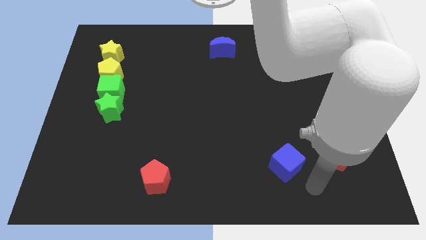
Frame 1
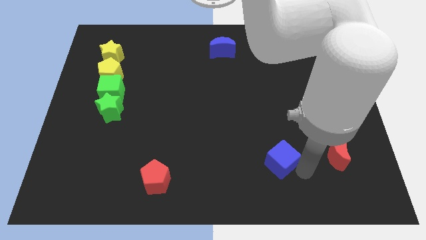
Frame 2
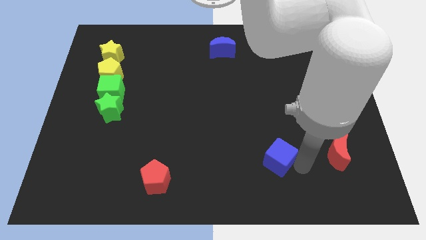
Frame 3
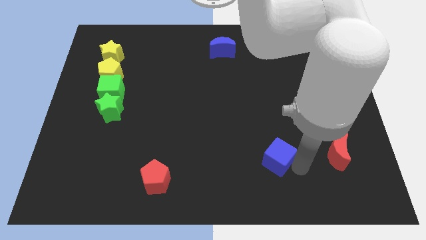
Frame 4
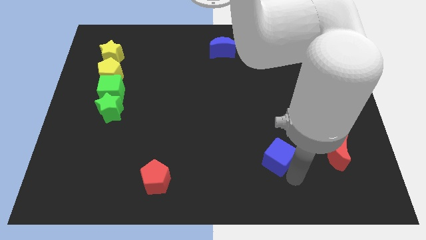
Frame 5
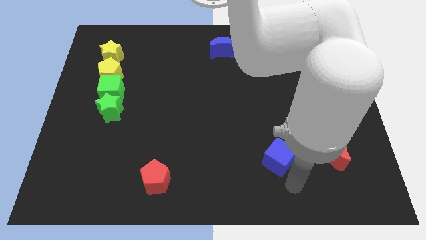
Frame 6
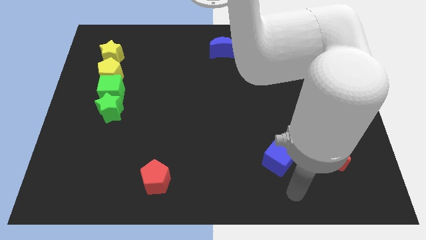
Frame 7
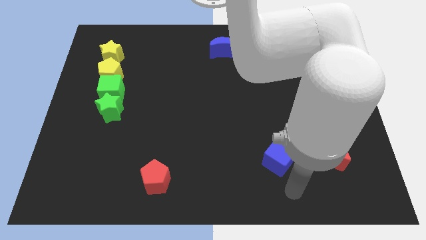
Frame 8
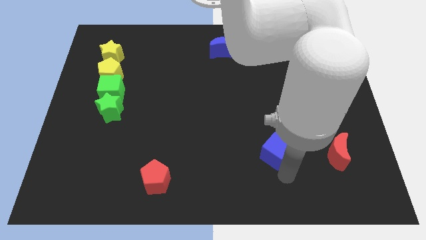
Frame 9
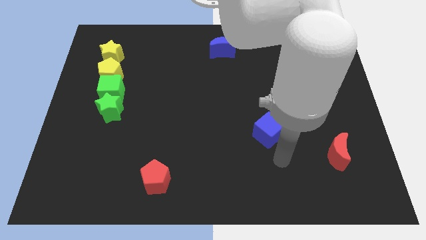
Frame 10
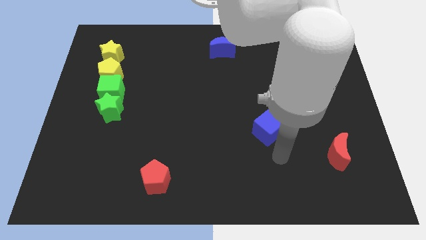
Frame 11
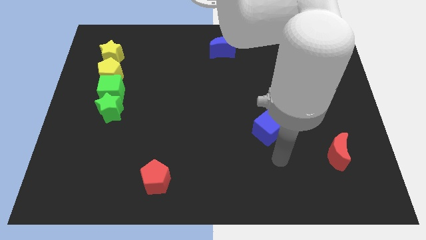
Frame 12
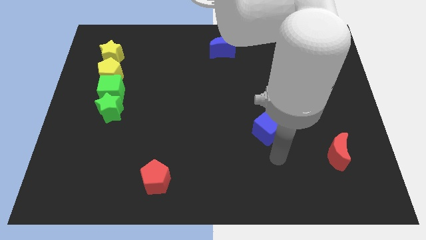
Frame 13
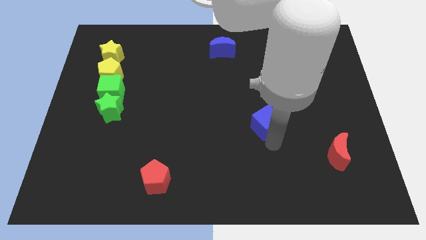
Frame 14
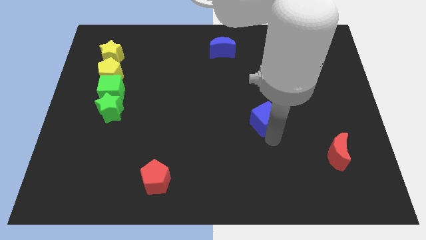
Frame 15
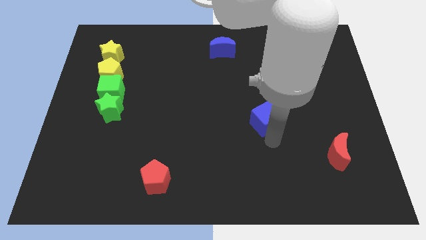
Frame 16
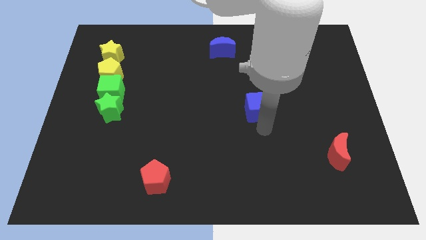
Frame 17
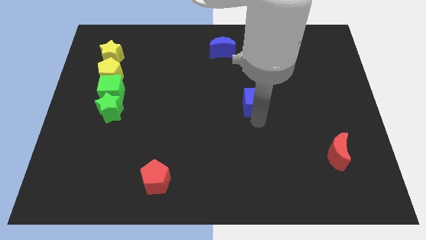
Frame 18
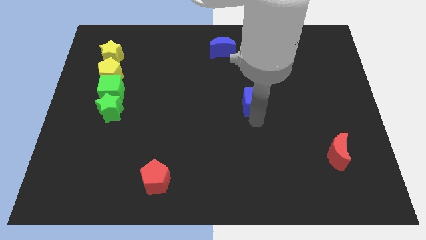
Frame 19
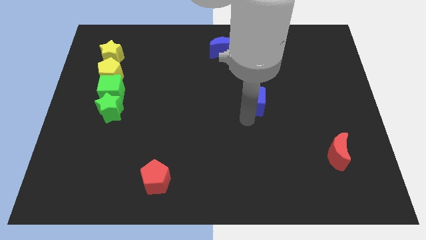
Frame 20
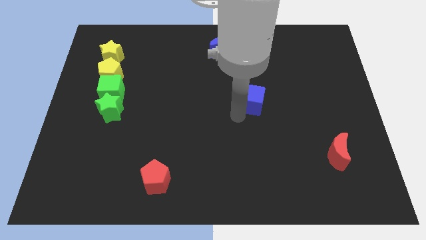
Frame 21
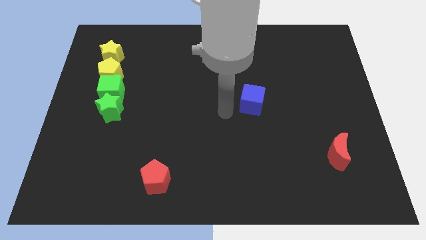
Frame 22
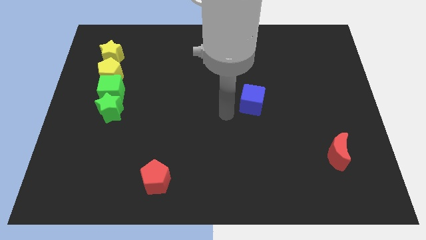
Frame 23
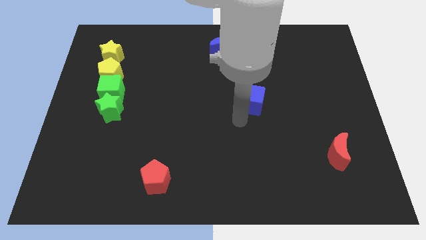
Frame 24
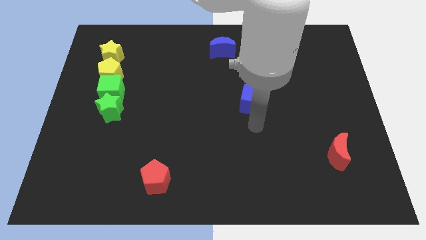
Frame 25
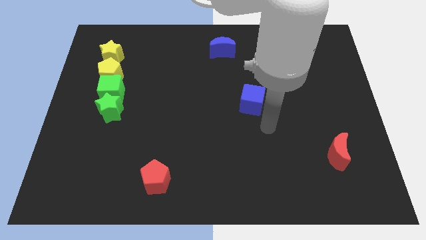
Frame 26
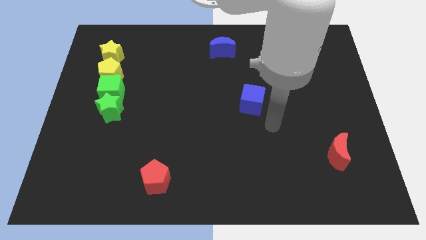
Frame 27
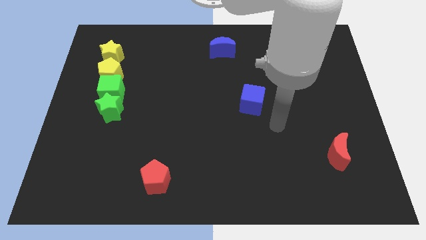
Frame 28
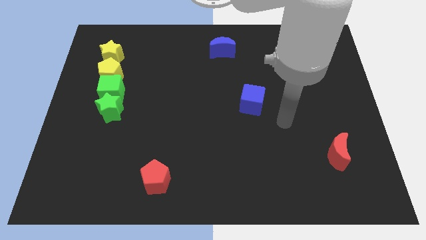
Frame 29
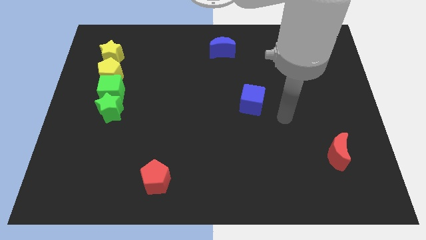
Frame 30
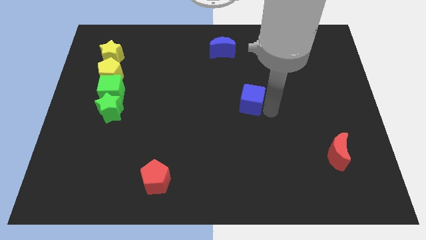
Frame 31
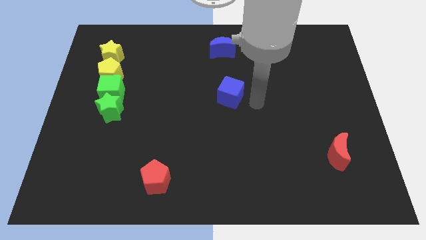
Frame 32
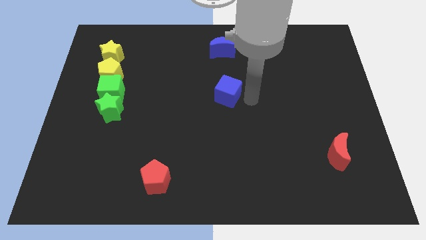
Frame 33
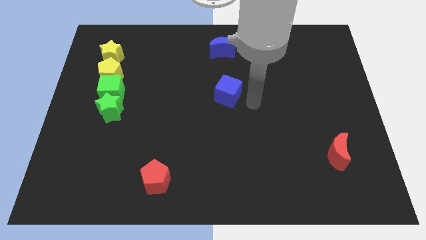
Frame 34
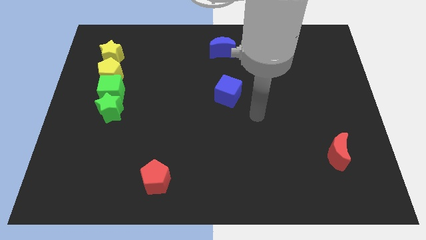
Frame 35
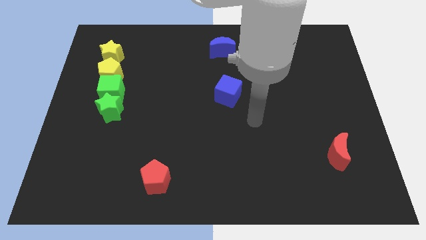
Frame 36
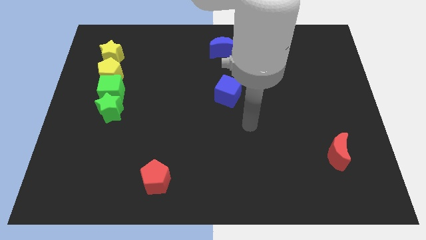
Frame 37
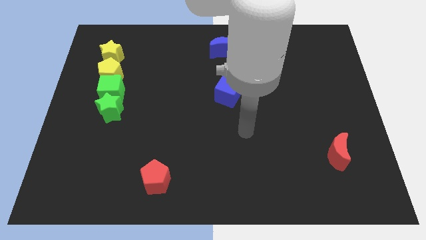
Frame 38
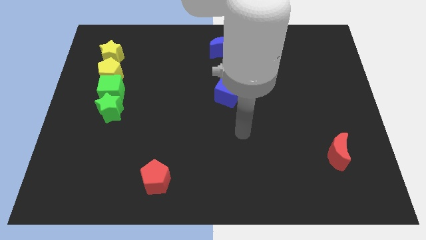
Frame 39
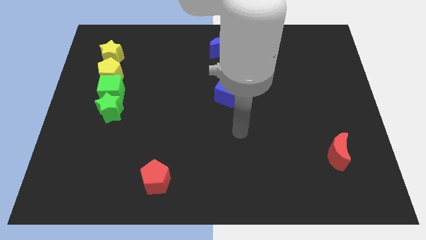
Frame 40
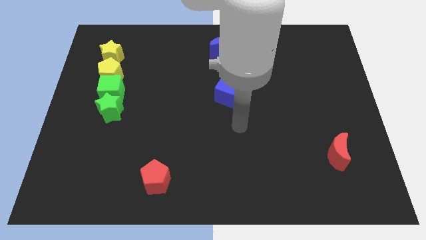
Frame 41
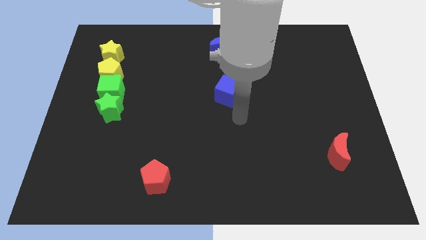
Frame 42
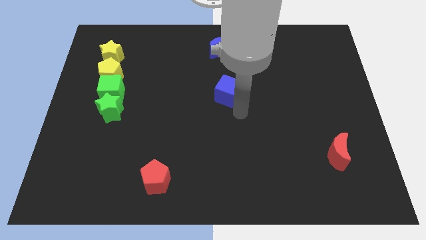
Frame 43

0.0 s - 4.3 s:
place the blue cube to the center of the board

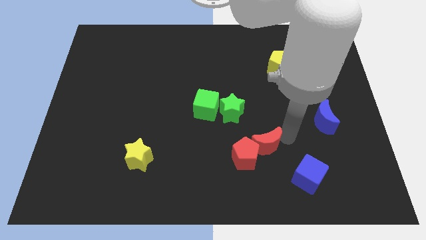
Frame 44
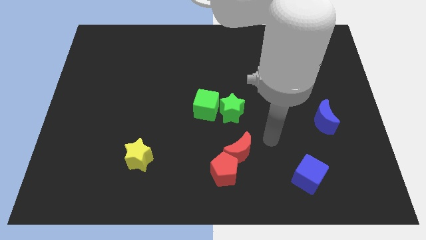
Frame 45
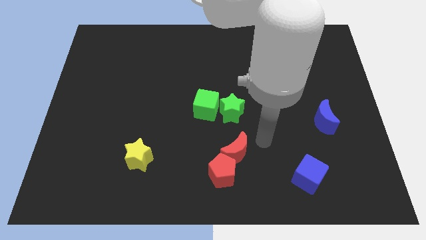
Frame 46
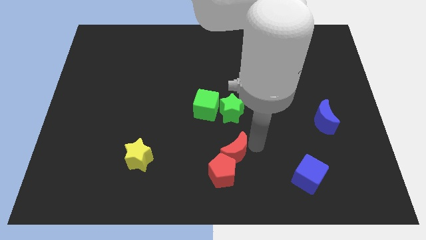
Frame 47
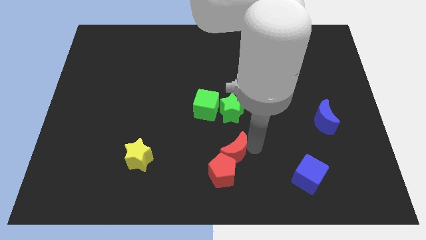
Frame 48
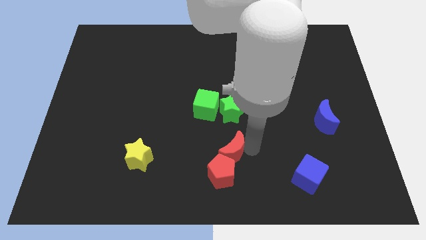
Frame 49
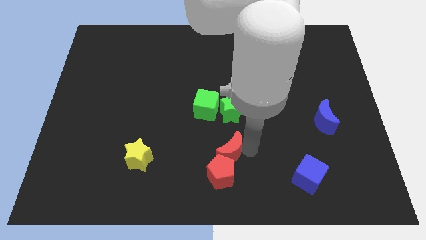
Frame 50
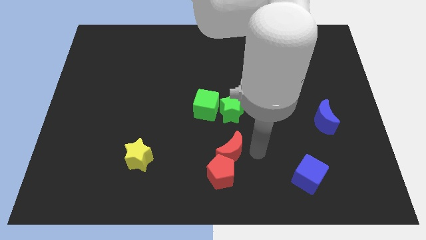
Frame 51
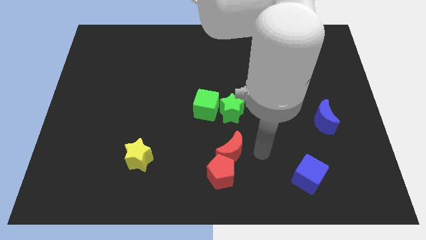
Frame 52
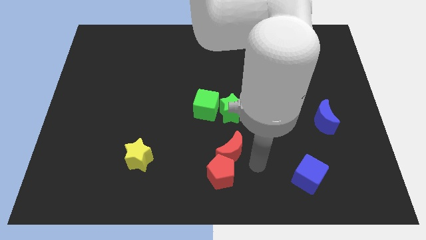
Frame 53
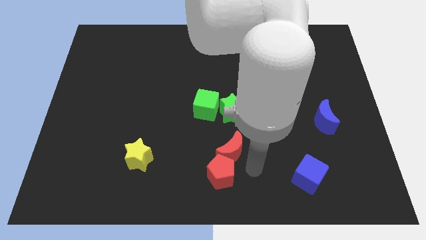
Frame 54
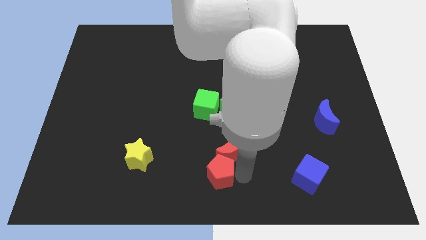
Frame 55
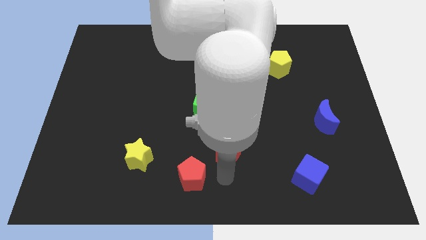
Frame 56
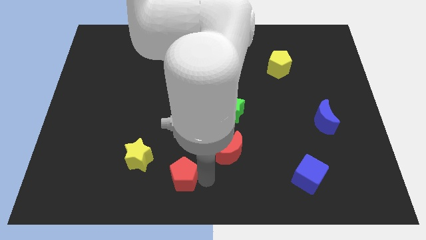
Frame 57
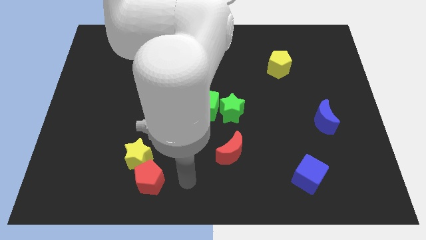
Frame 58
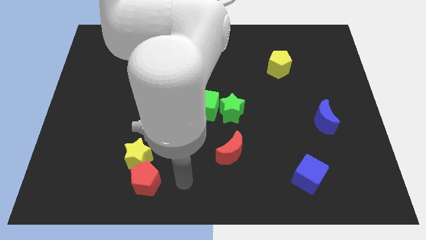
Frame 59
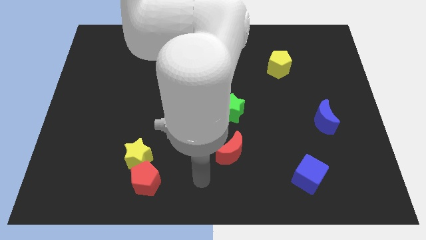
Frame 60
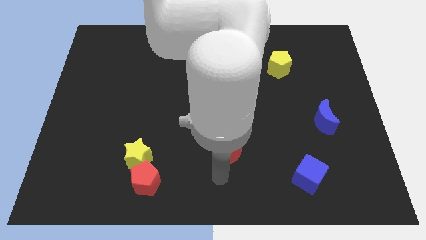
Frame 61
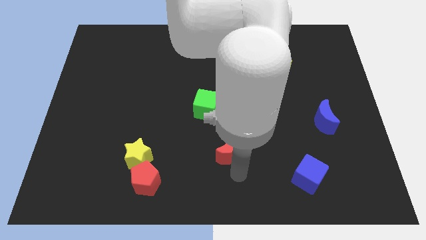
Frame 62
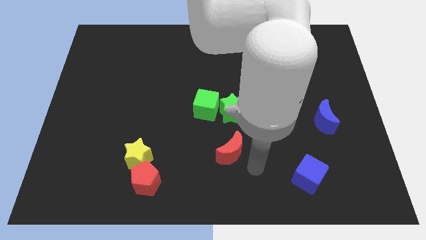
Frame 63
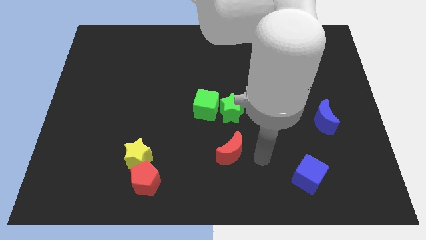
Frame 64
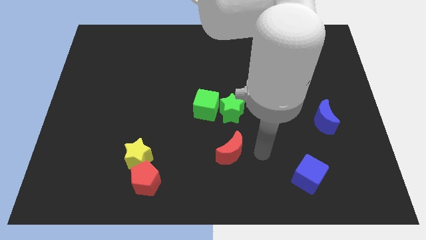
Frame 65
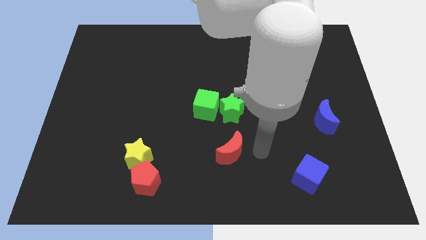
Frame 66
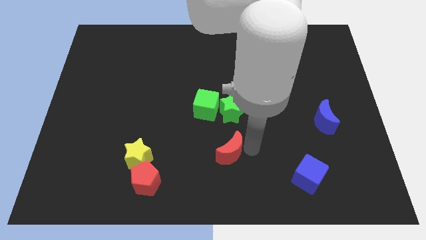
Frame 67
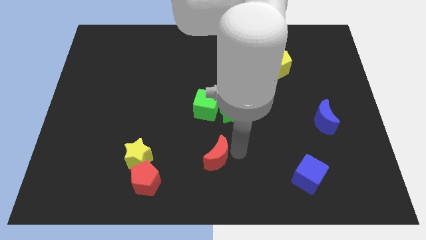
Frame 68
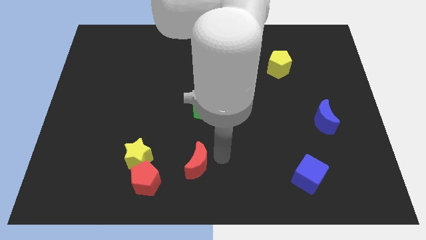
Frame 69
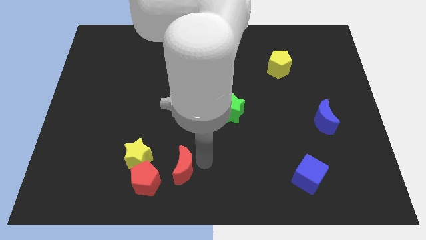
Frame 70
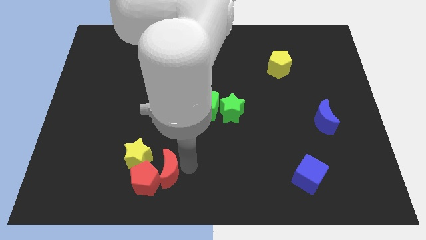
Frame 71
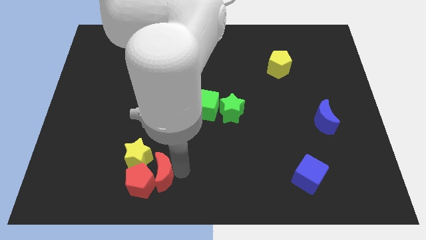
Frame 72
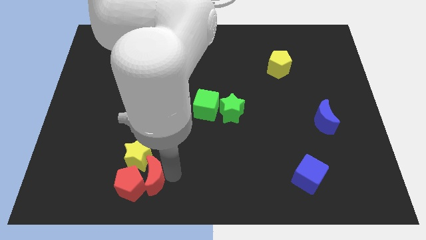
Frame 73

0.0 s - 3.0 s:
slide the red pentagon and red moon close to the yellow star

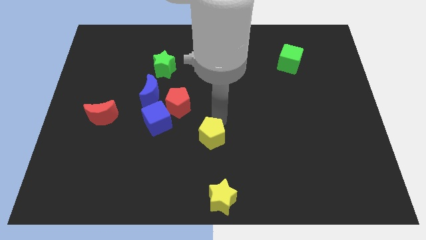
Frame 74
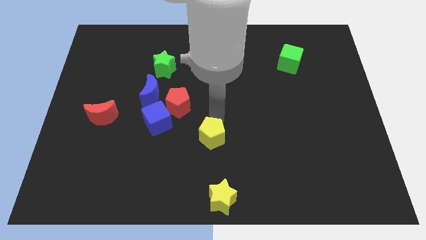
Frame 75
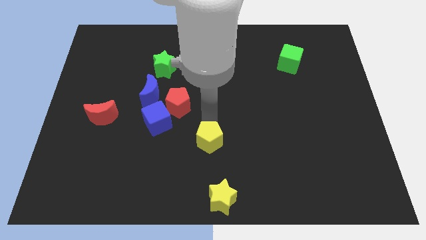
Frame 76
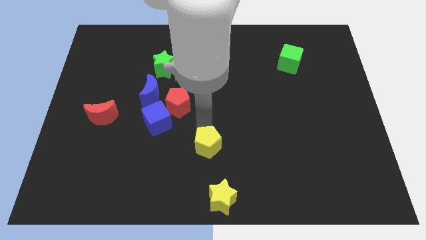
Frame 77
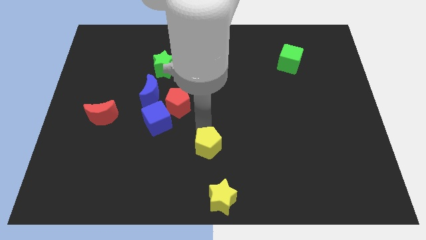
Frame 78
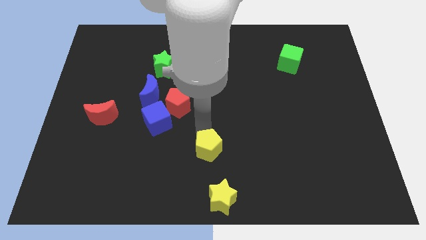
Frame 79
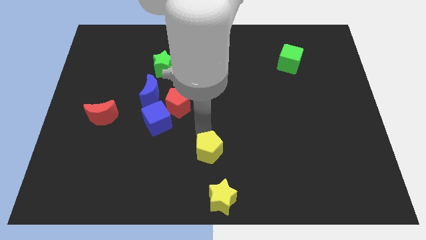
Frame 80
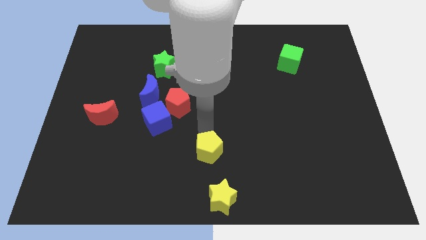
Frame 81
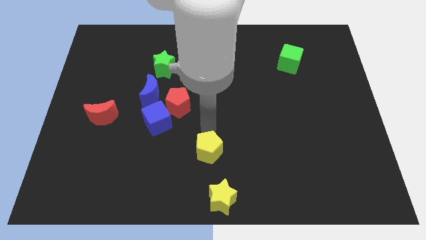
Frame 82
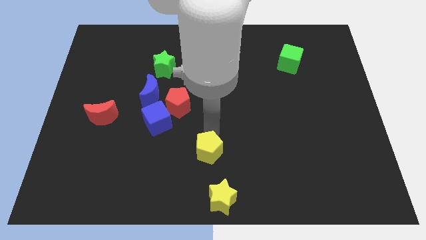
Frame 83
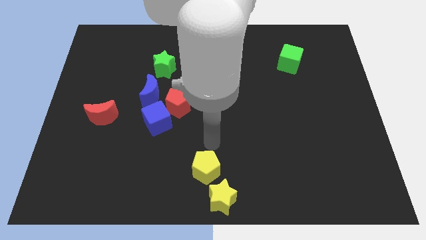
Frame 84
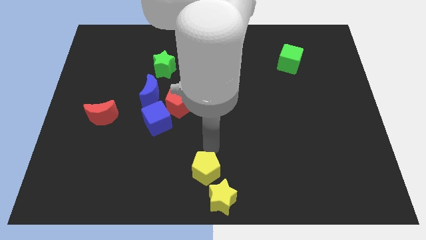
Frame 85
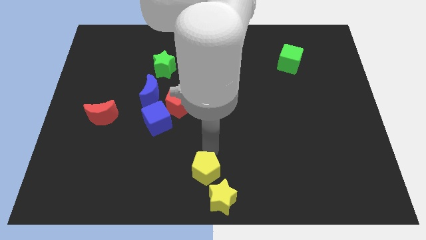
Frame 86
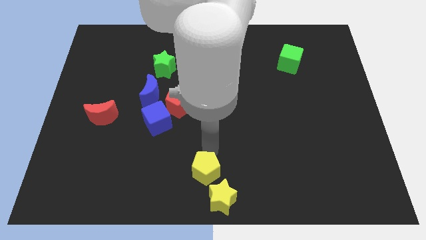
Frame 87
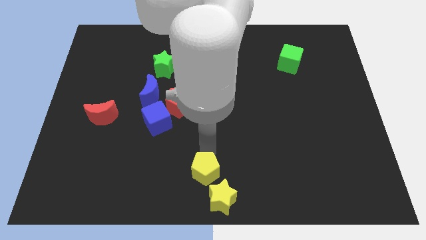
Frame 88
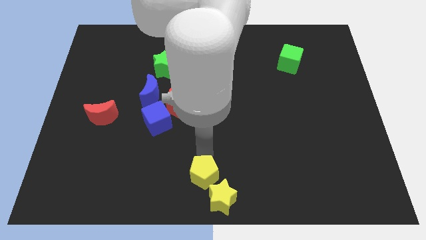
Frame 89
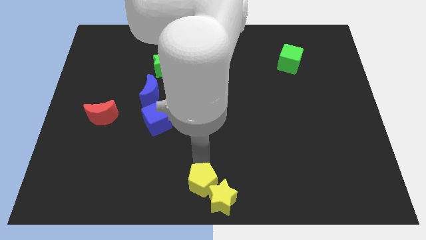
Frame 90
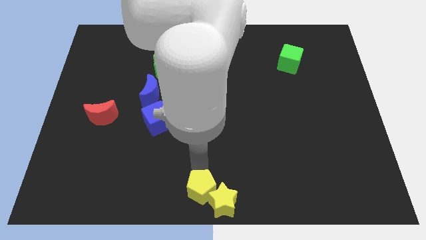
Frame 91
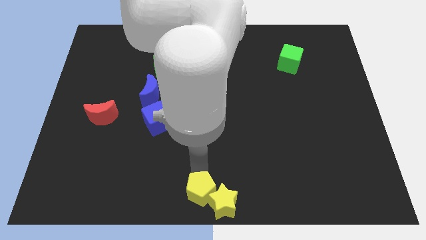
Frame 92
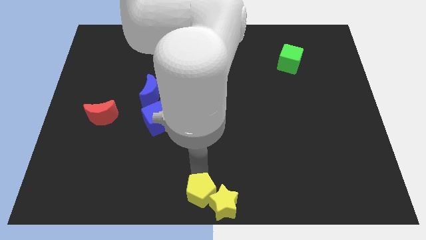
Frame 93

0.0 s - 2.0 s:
move the yellow pentagon into the yellow star
